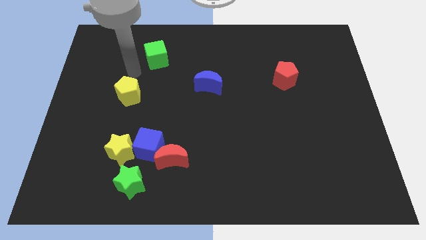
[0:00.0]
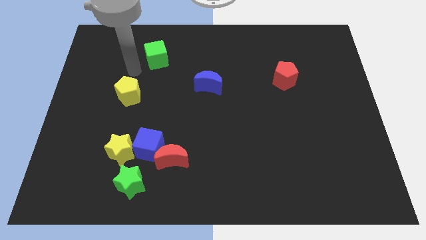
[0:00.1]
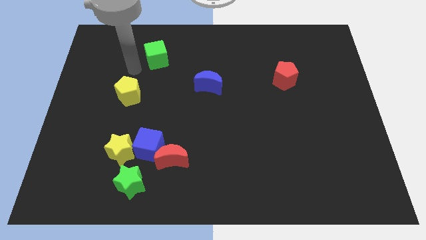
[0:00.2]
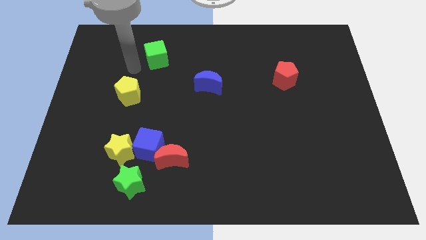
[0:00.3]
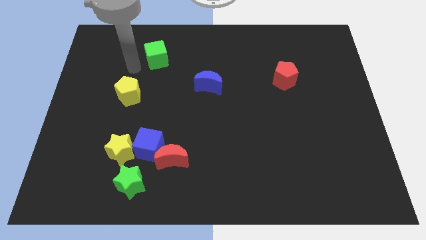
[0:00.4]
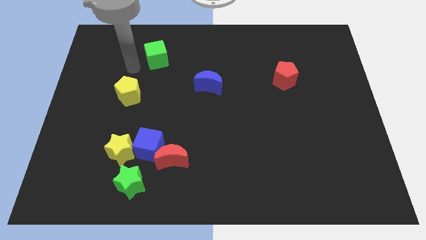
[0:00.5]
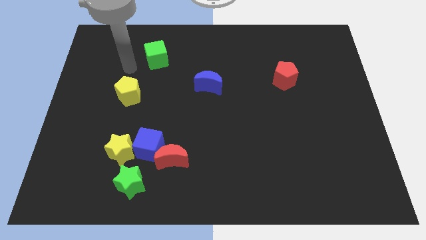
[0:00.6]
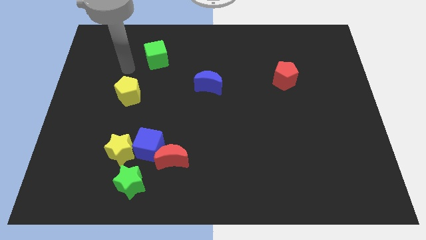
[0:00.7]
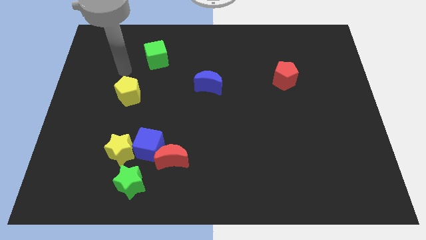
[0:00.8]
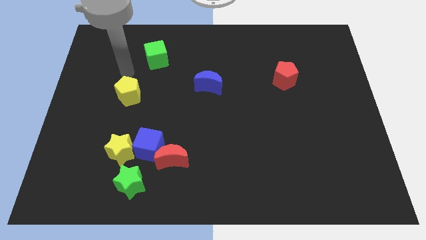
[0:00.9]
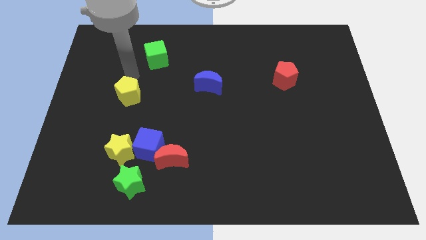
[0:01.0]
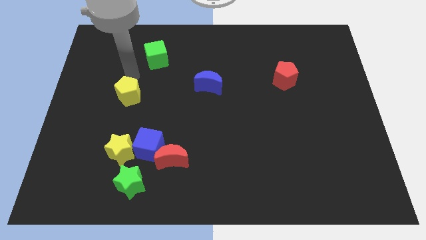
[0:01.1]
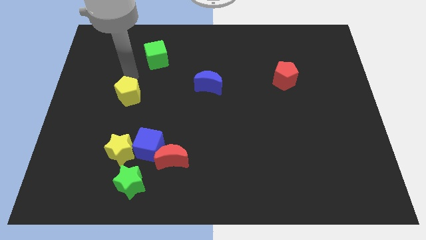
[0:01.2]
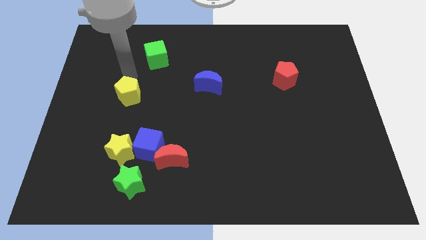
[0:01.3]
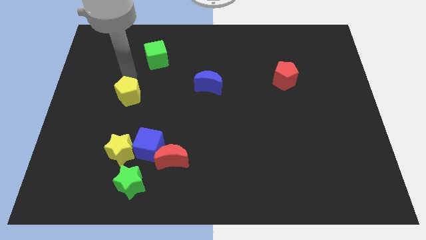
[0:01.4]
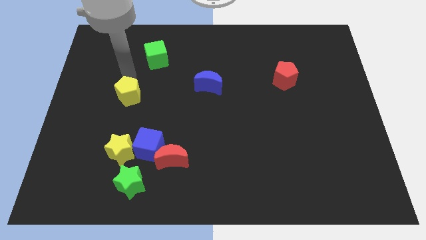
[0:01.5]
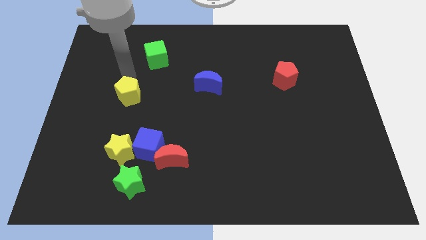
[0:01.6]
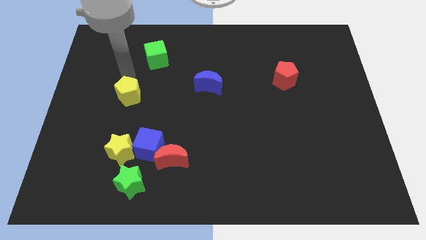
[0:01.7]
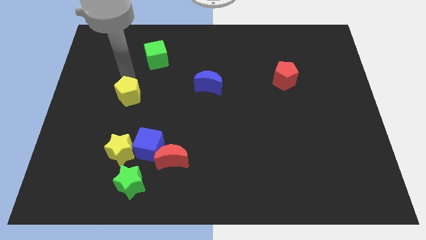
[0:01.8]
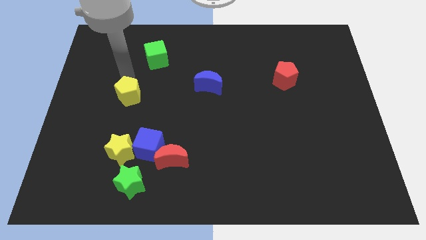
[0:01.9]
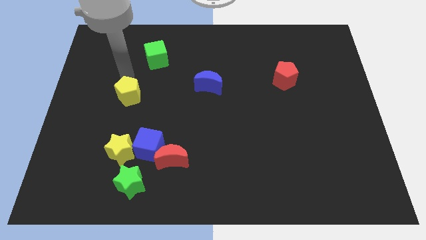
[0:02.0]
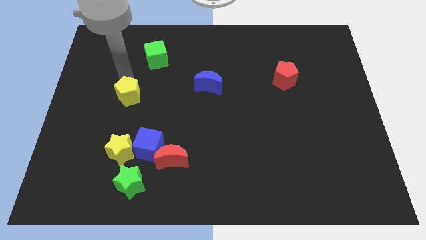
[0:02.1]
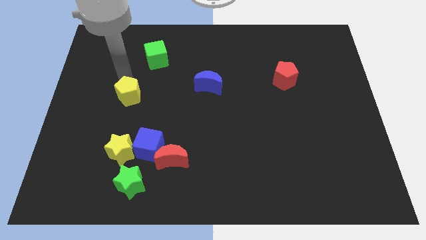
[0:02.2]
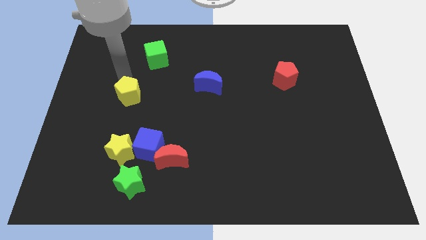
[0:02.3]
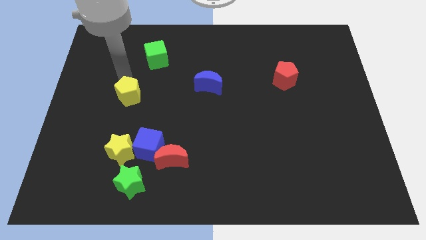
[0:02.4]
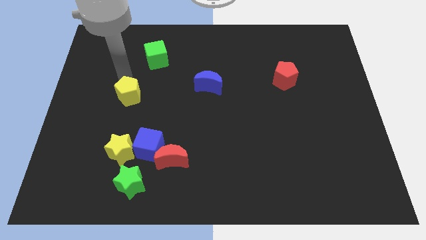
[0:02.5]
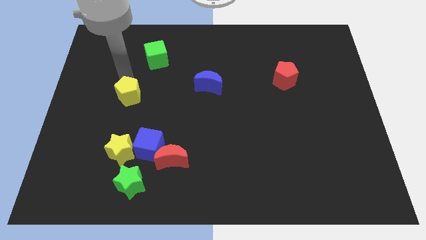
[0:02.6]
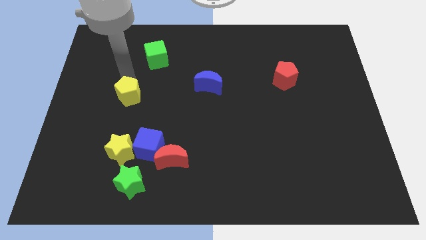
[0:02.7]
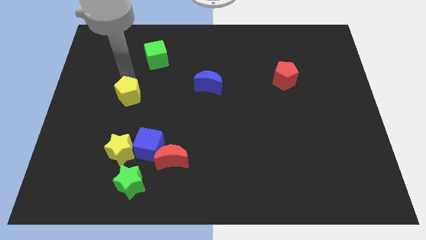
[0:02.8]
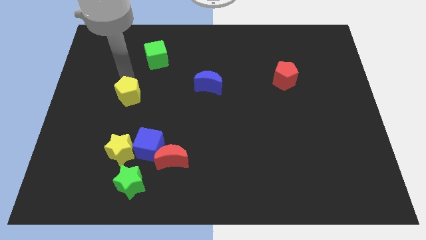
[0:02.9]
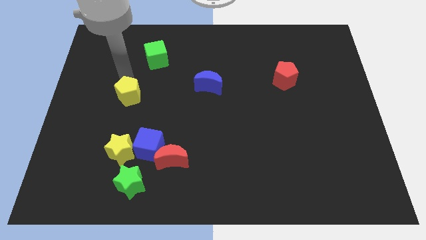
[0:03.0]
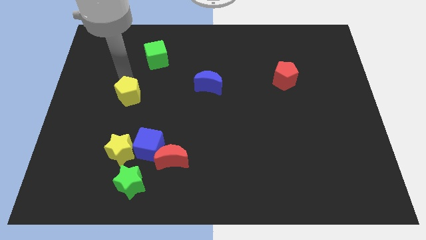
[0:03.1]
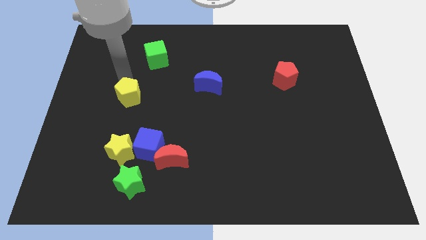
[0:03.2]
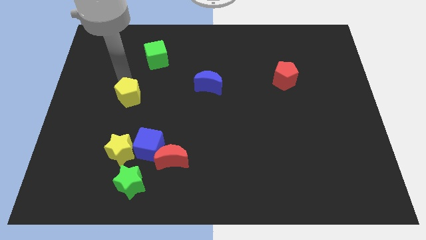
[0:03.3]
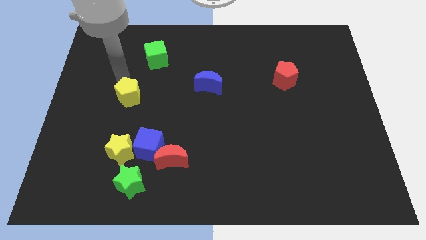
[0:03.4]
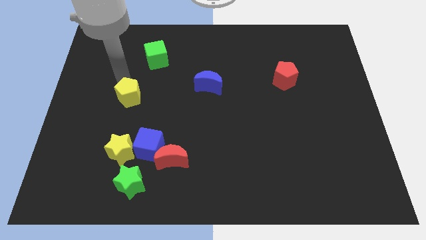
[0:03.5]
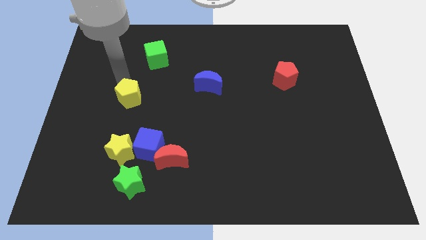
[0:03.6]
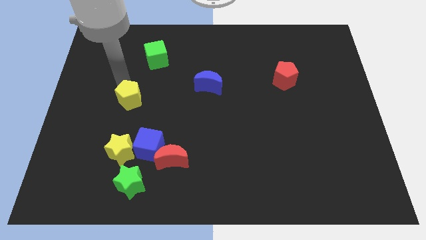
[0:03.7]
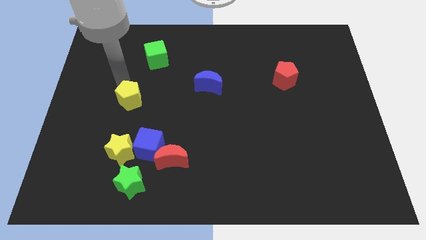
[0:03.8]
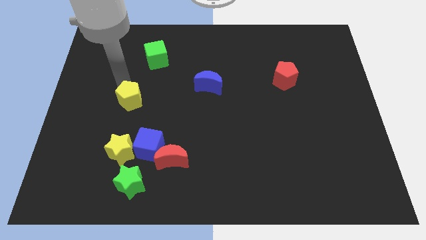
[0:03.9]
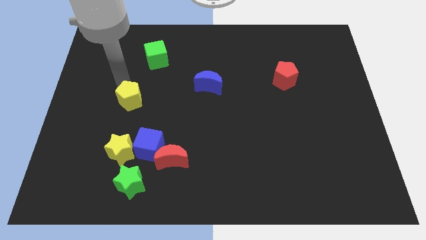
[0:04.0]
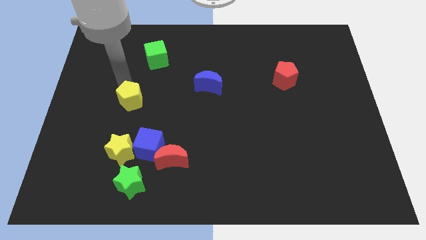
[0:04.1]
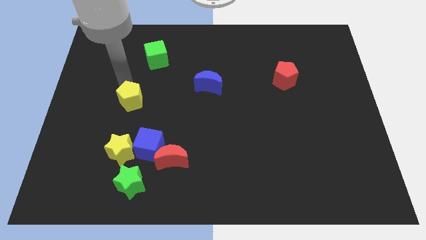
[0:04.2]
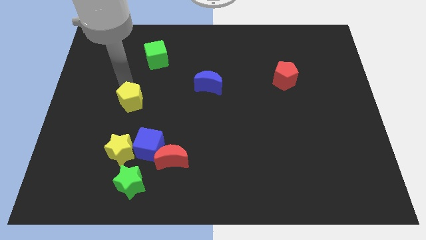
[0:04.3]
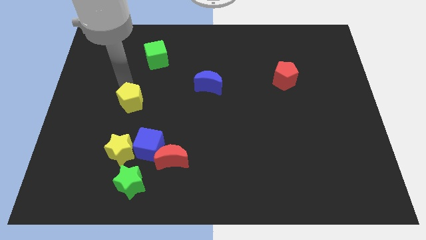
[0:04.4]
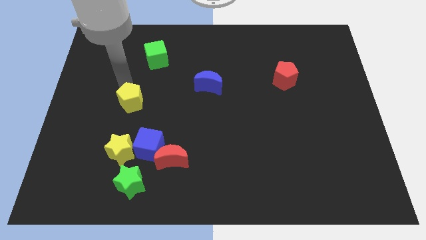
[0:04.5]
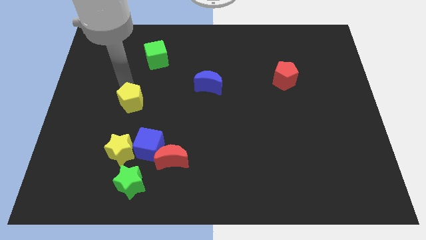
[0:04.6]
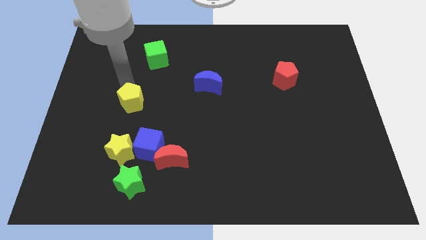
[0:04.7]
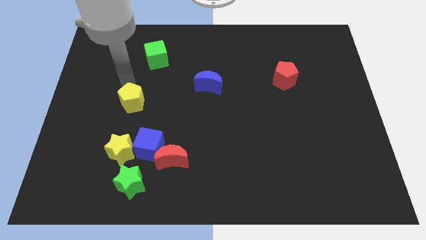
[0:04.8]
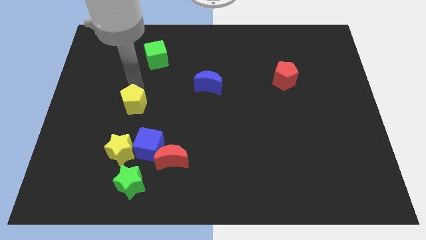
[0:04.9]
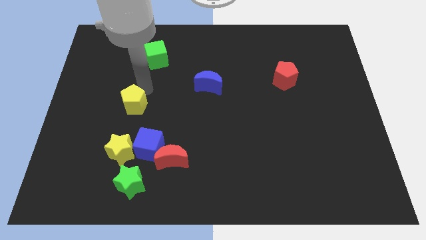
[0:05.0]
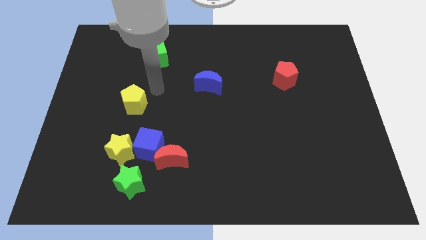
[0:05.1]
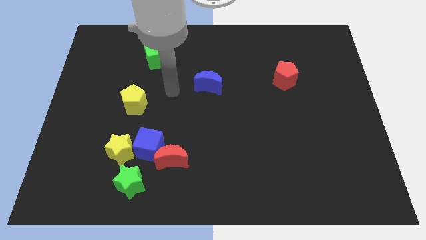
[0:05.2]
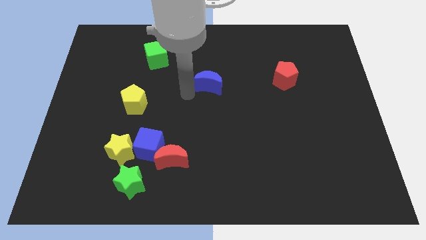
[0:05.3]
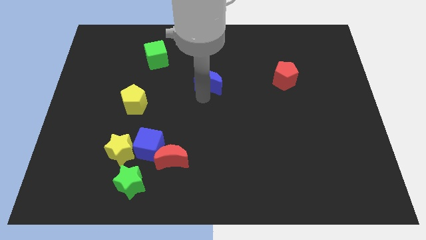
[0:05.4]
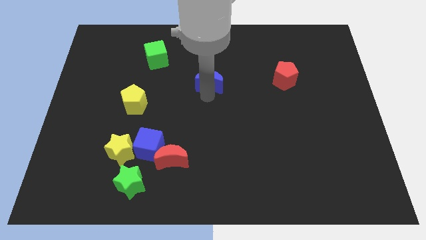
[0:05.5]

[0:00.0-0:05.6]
move yellow pentagon slightly down

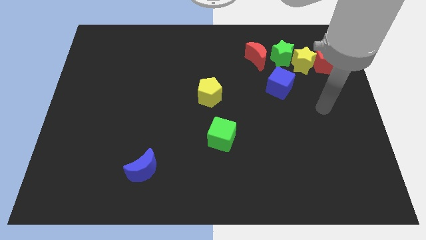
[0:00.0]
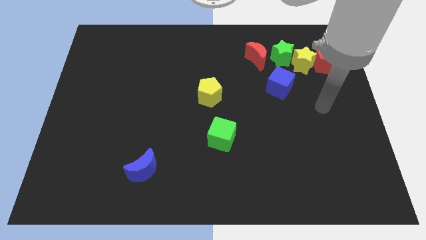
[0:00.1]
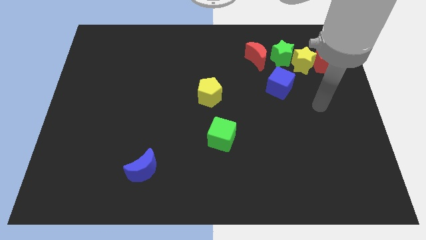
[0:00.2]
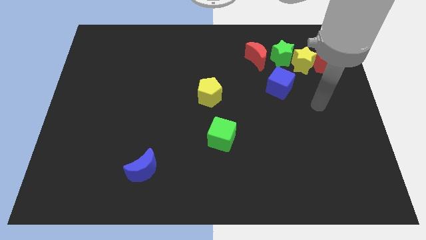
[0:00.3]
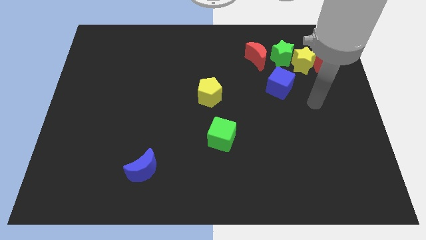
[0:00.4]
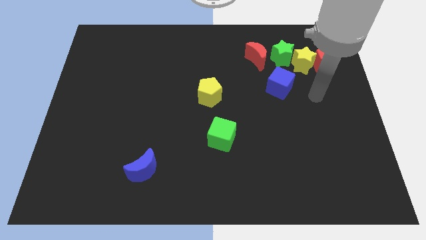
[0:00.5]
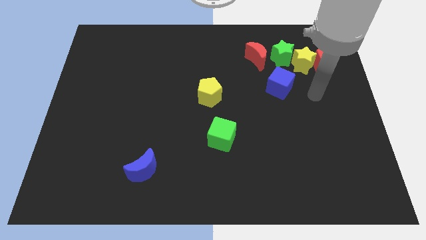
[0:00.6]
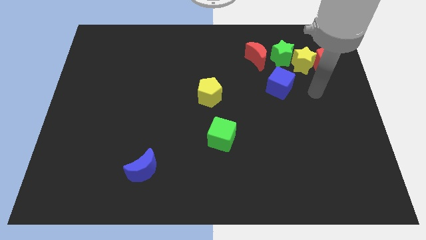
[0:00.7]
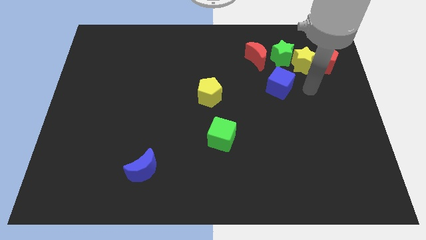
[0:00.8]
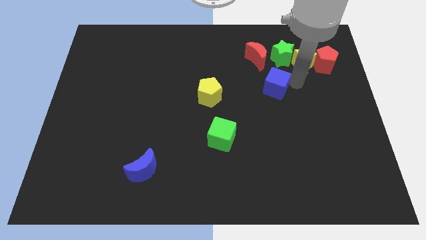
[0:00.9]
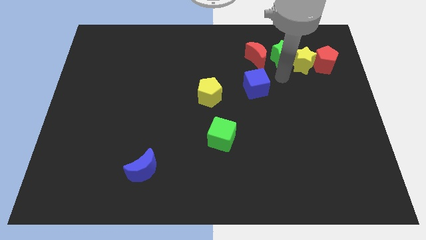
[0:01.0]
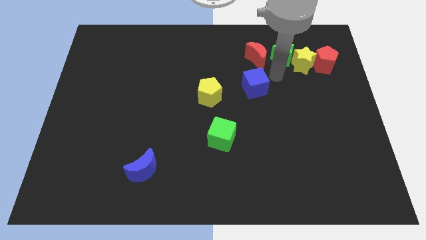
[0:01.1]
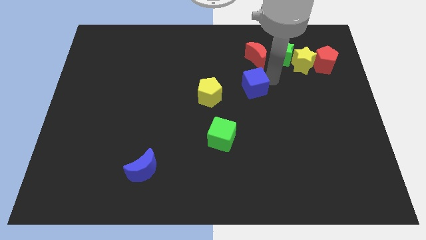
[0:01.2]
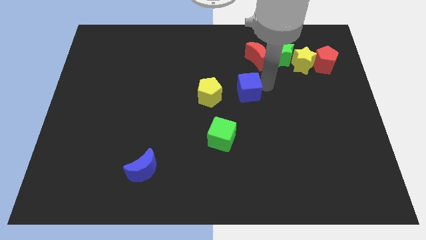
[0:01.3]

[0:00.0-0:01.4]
slightly push the blue cube into the yellow pentagon at the middle of the board

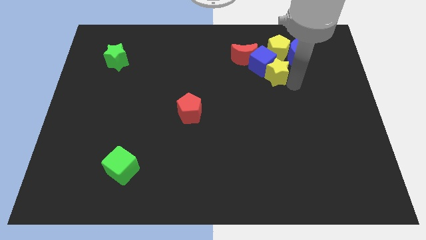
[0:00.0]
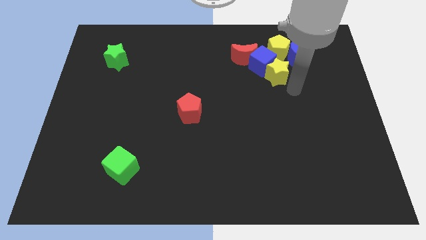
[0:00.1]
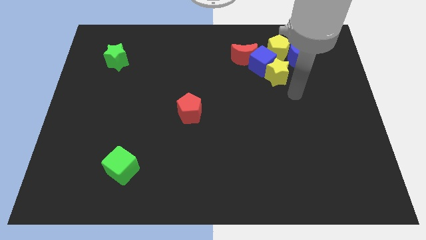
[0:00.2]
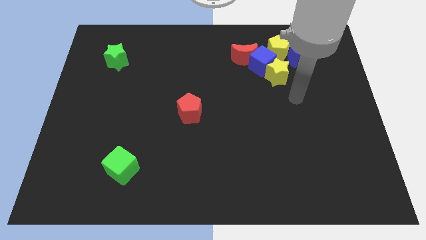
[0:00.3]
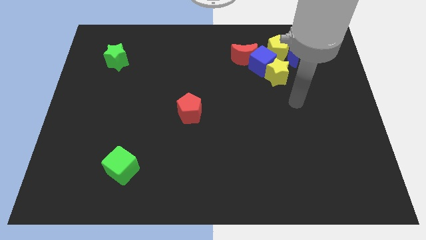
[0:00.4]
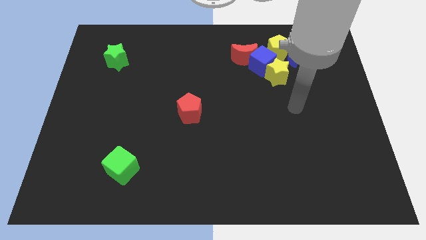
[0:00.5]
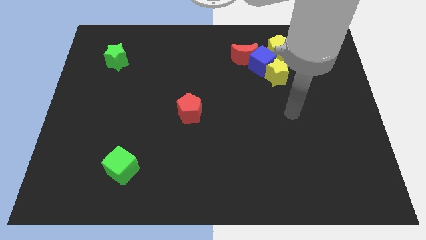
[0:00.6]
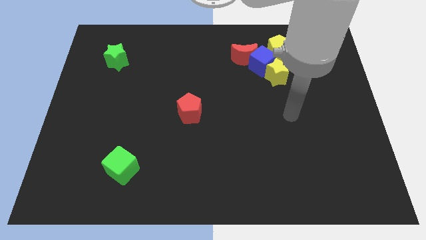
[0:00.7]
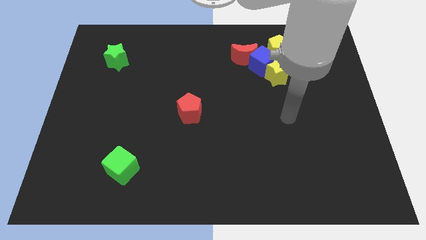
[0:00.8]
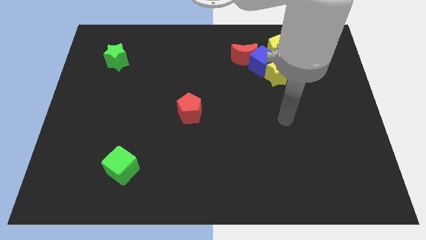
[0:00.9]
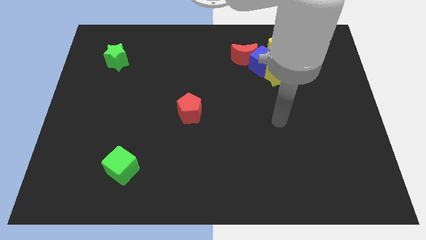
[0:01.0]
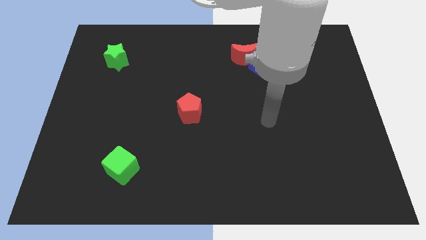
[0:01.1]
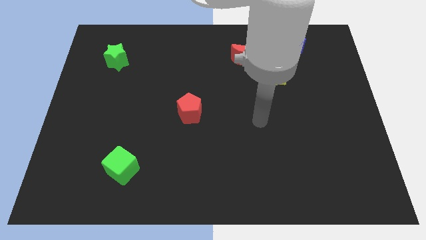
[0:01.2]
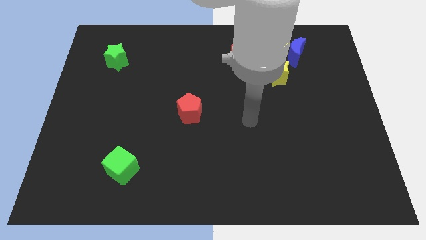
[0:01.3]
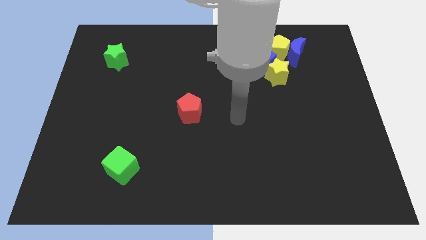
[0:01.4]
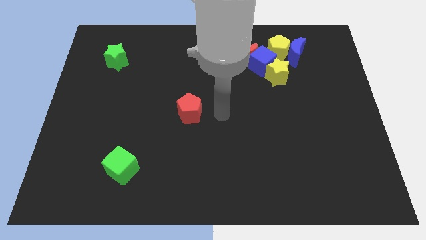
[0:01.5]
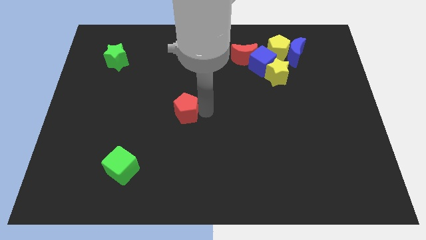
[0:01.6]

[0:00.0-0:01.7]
move your arm towards the red pentagon

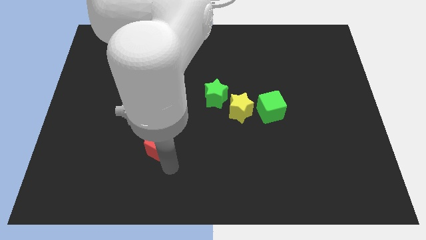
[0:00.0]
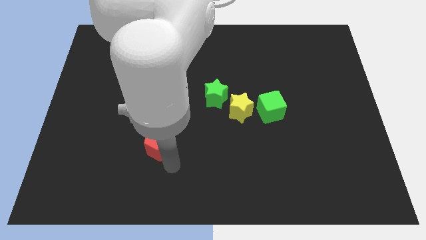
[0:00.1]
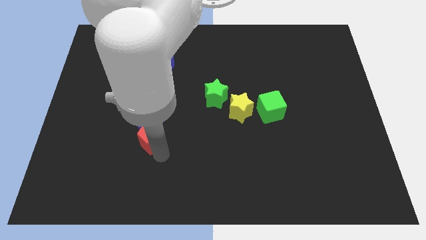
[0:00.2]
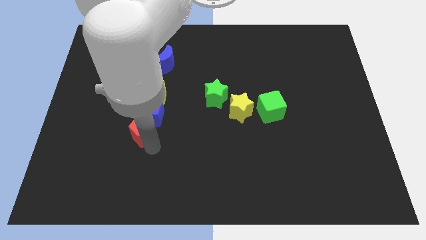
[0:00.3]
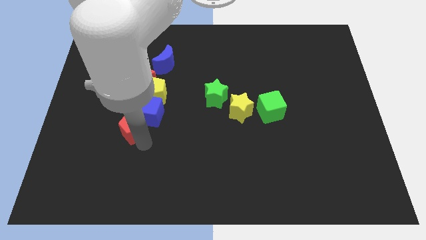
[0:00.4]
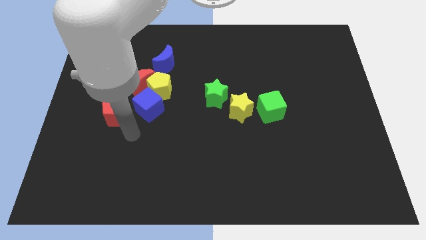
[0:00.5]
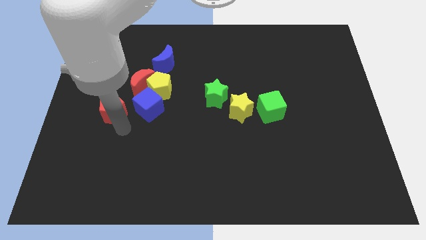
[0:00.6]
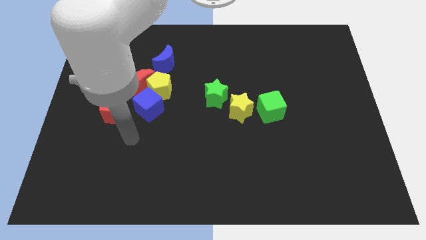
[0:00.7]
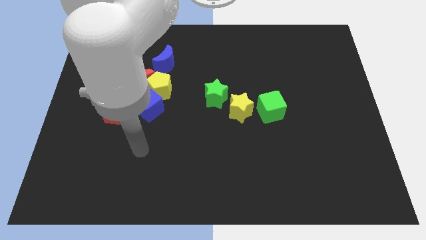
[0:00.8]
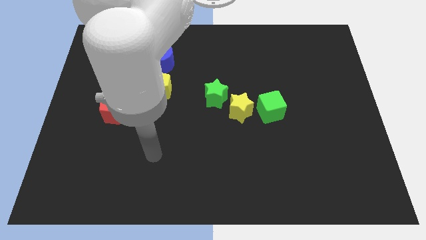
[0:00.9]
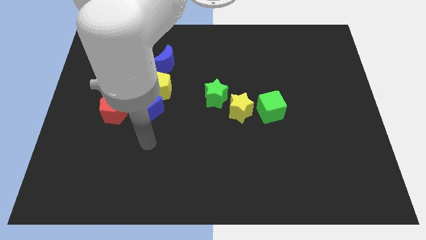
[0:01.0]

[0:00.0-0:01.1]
slide red pentagon to the left of blue cube
